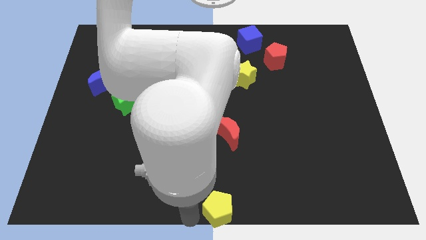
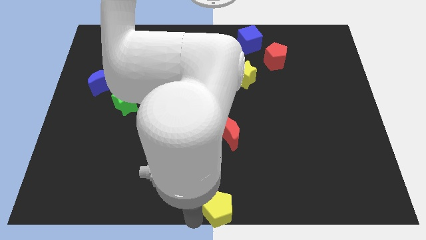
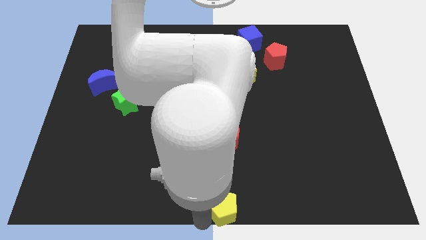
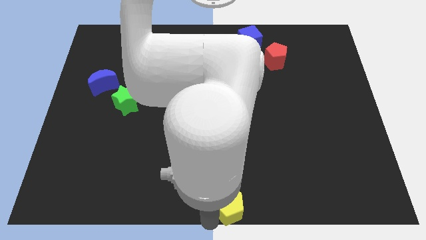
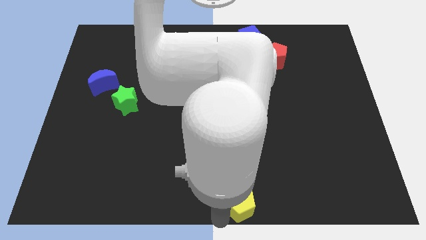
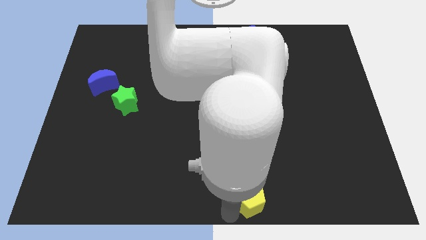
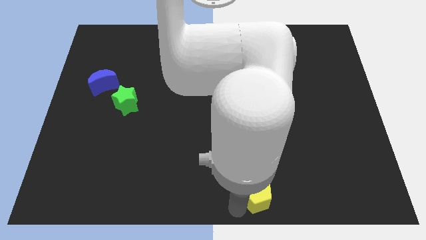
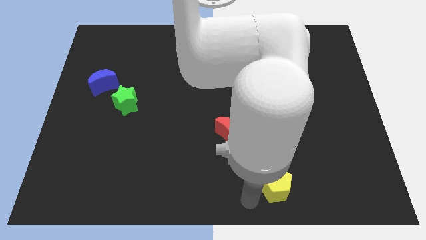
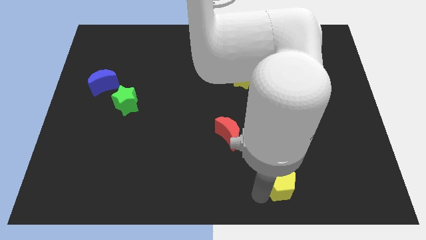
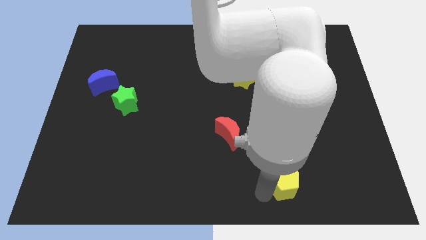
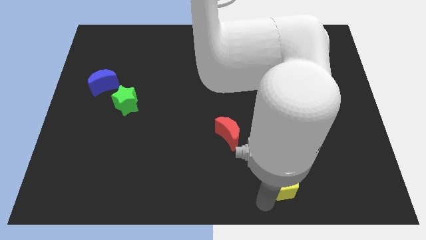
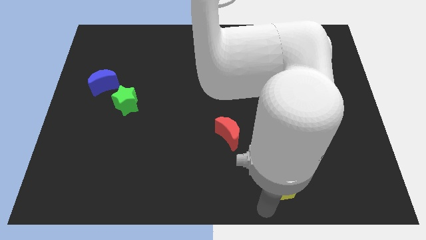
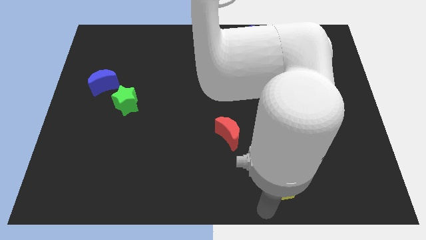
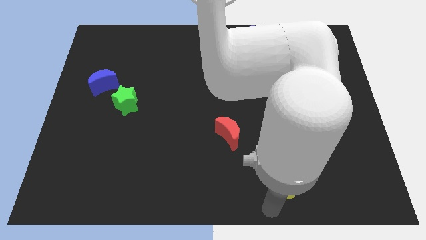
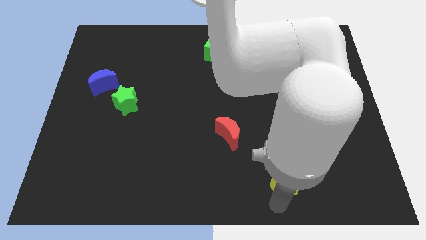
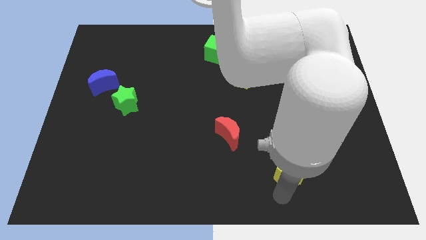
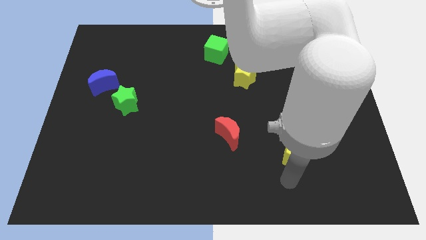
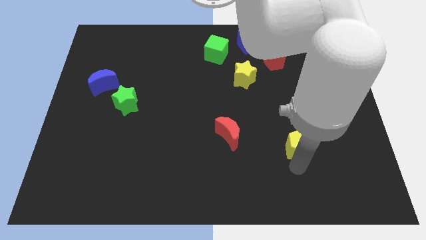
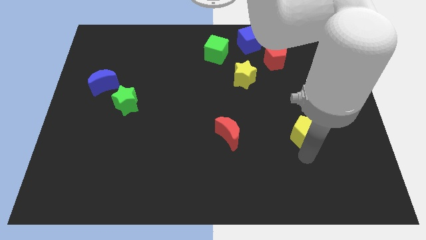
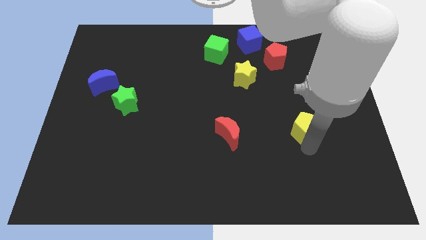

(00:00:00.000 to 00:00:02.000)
push the yellow pentagon to the horizontal right of the red moon

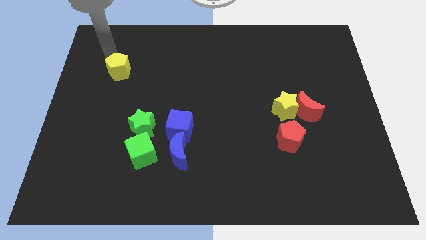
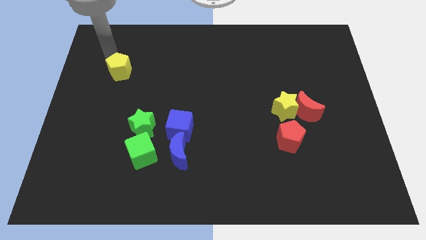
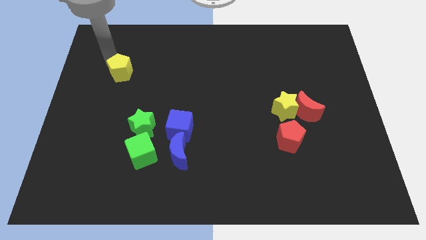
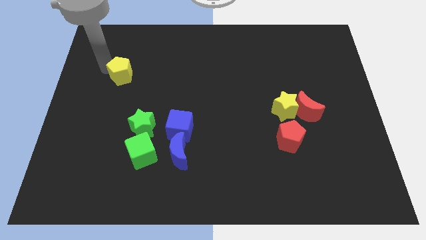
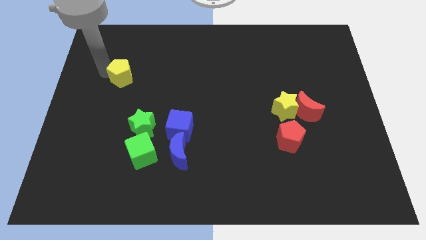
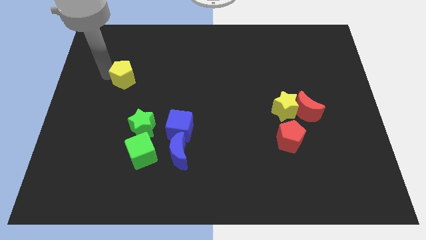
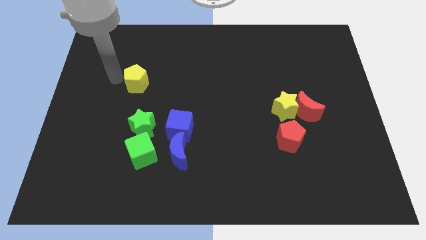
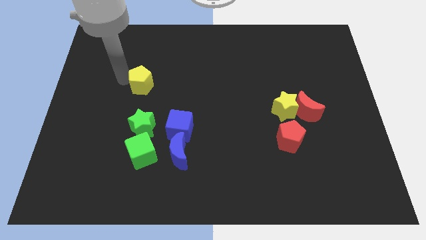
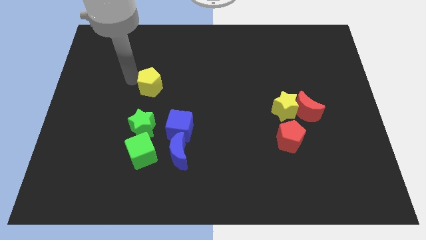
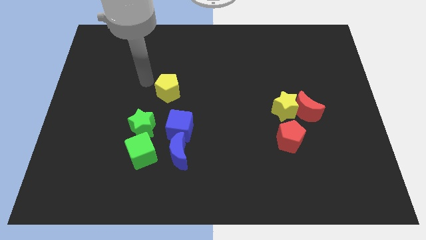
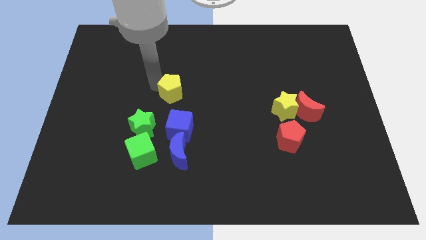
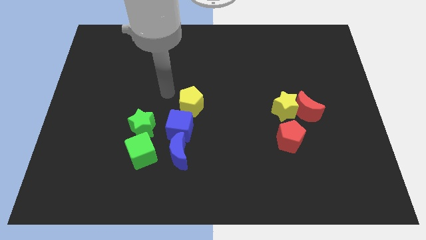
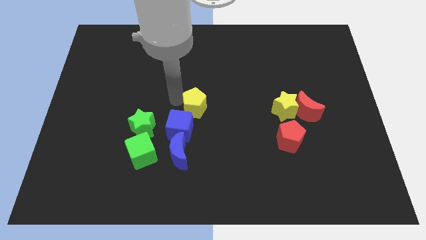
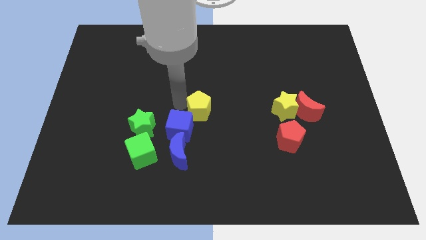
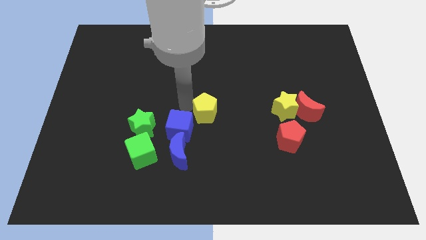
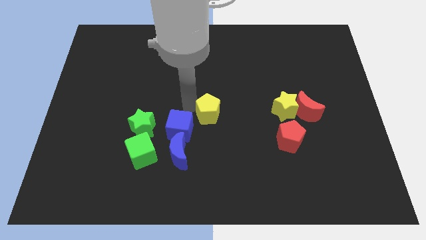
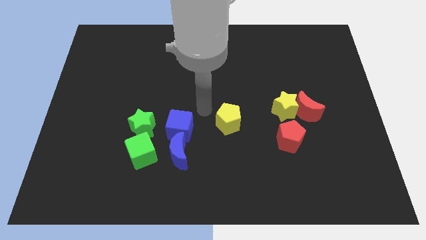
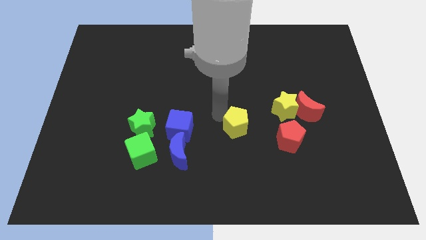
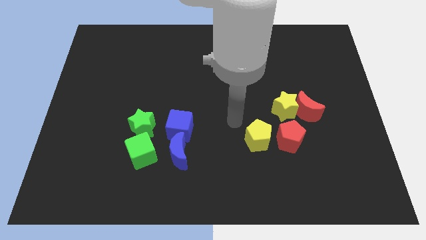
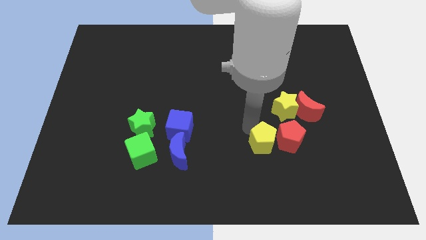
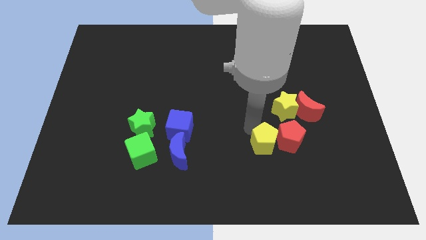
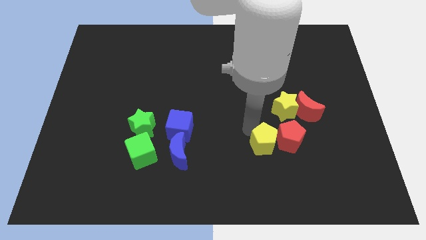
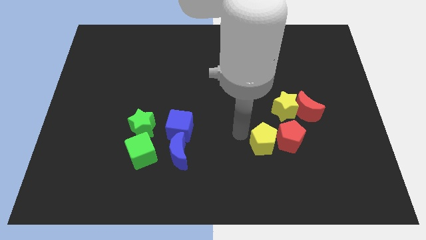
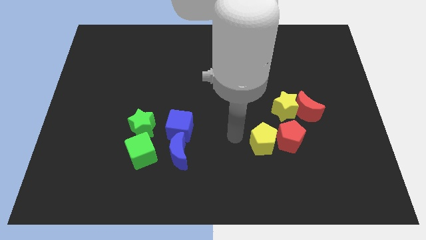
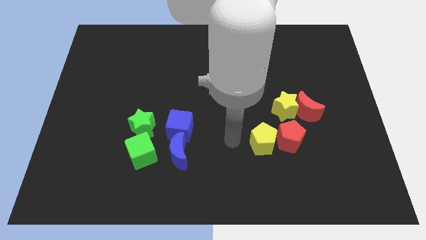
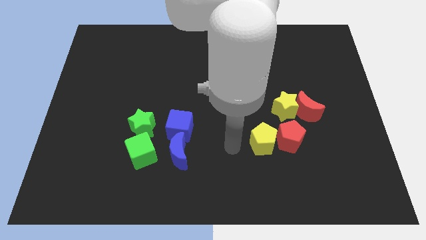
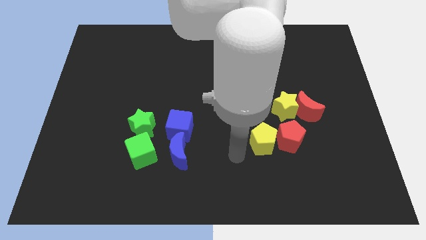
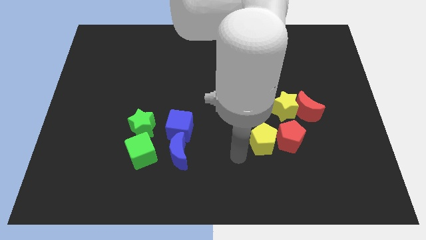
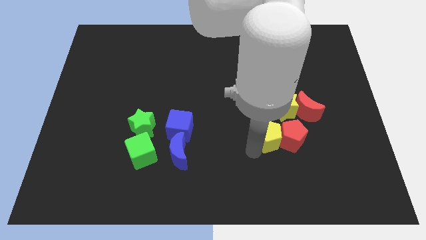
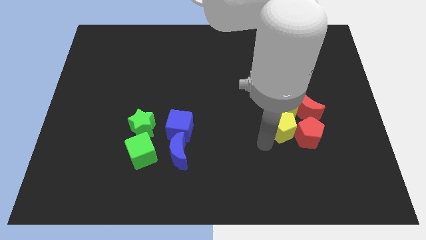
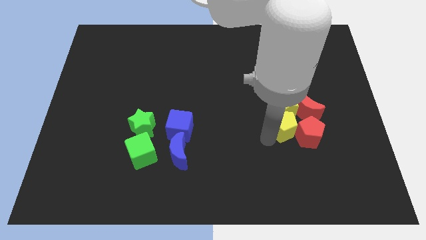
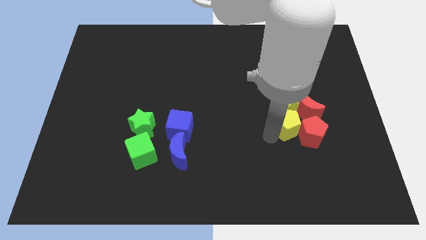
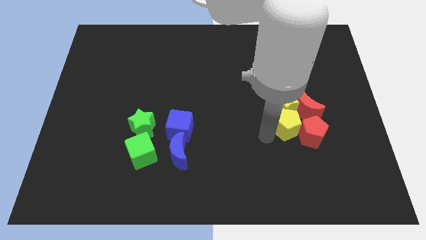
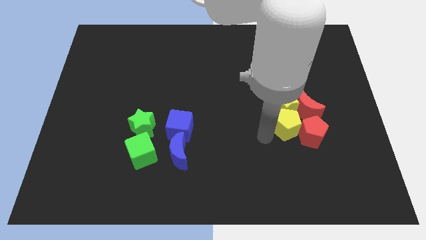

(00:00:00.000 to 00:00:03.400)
push the yellow pentagon into red pentagon

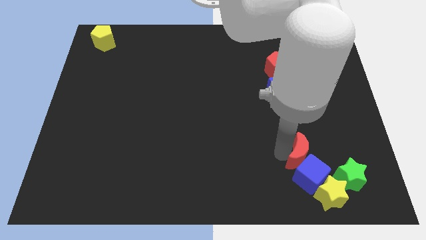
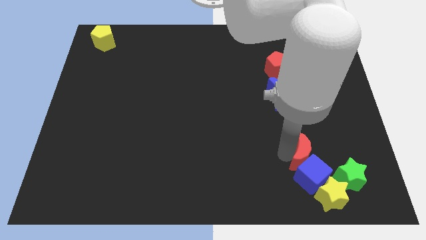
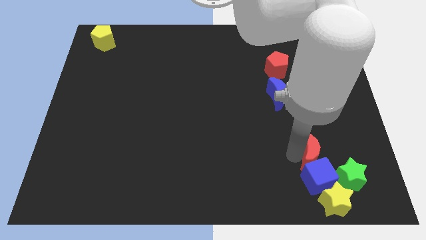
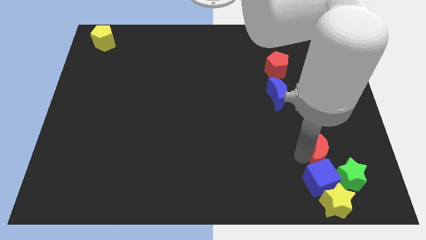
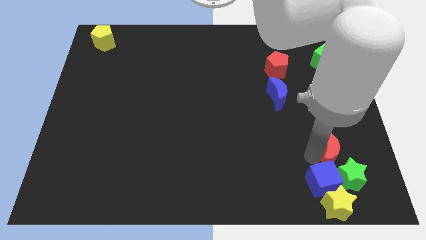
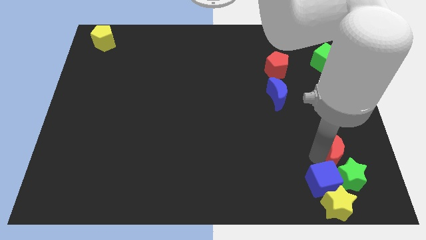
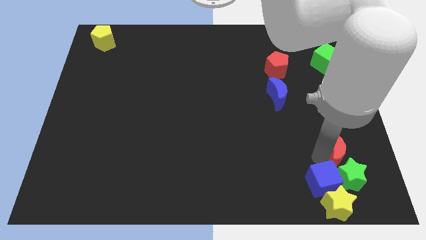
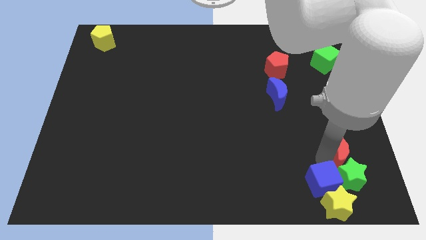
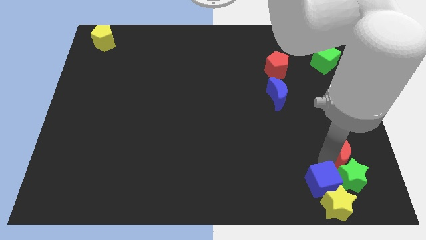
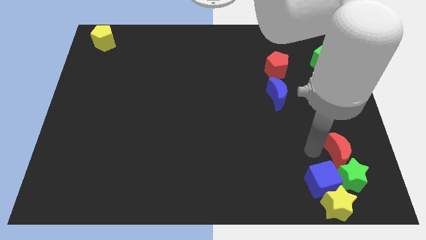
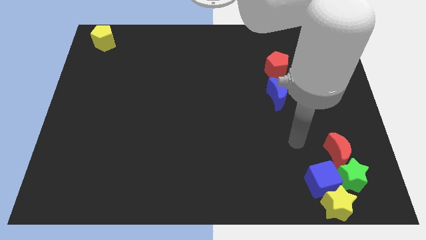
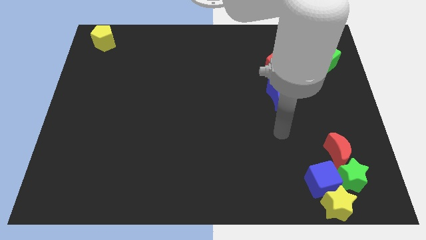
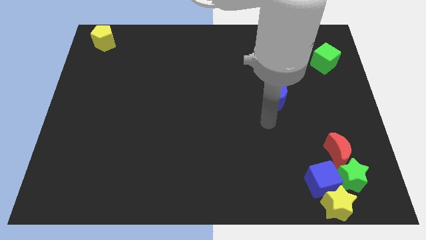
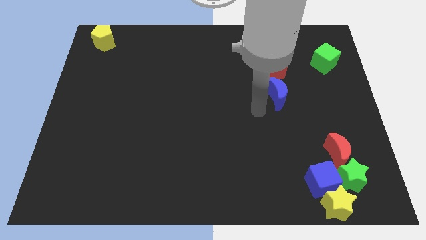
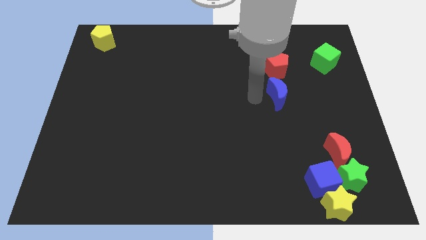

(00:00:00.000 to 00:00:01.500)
place the red crescent above the green star

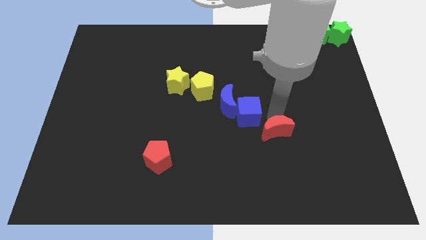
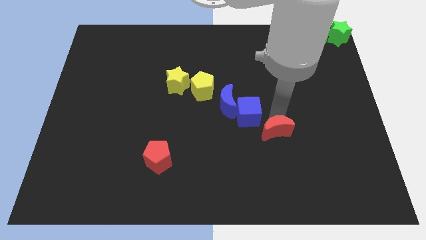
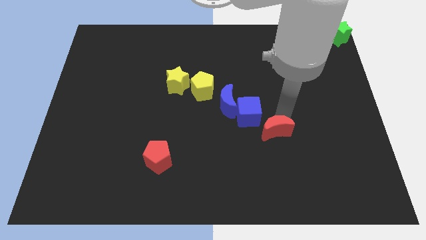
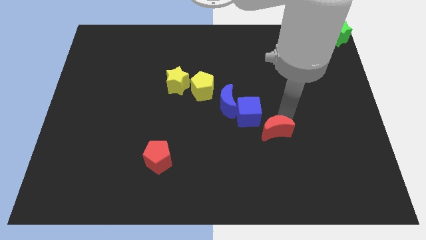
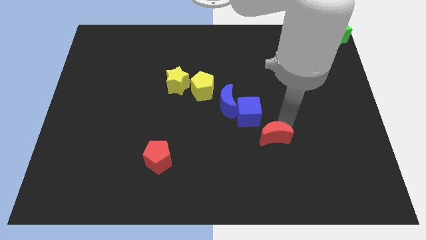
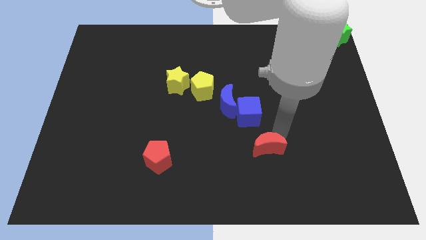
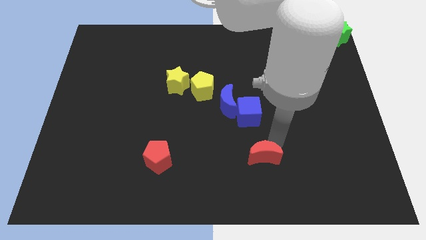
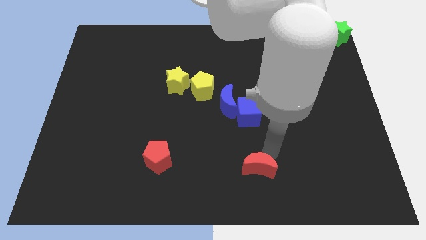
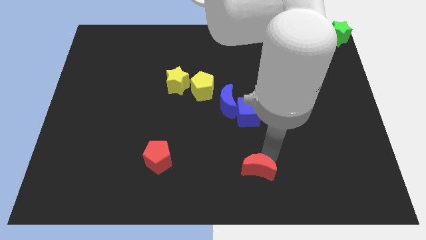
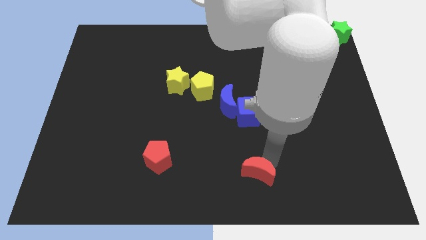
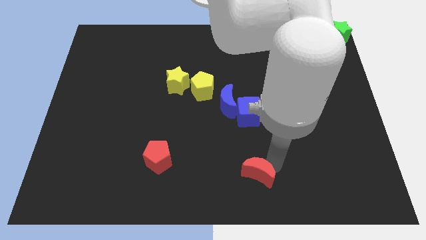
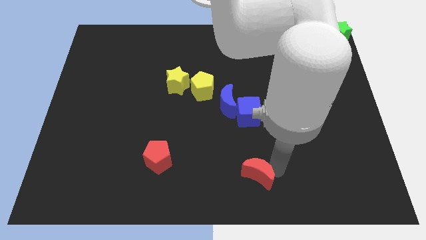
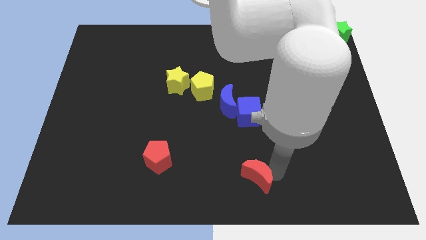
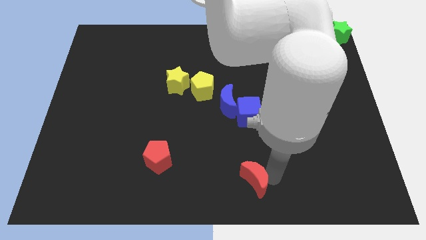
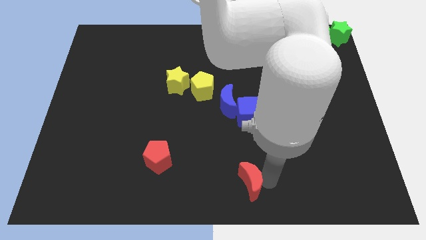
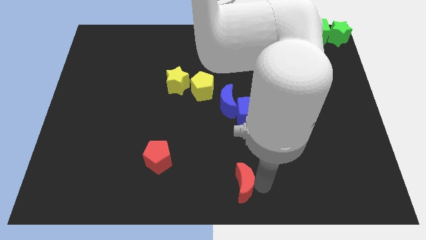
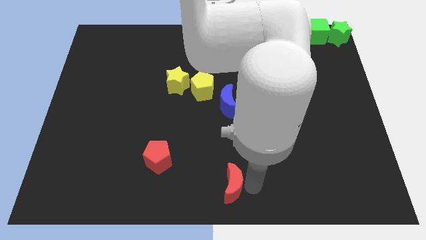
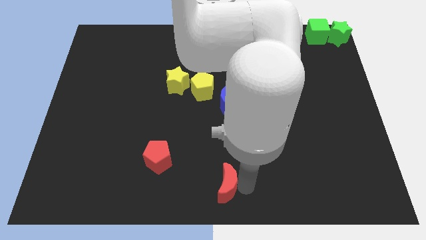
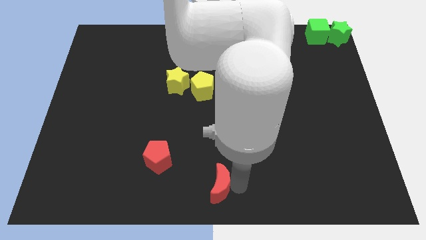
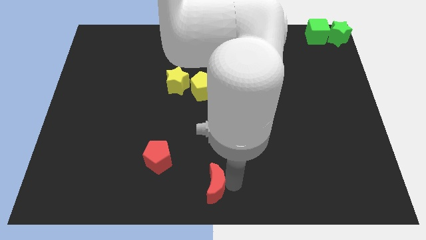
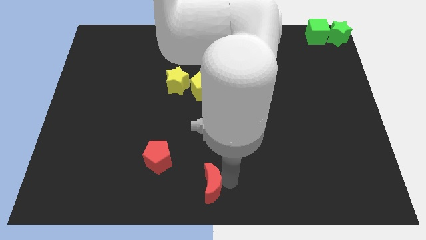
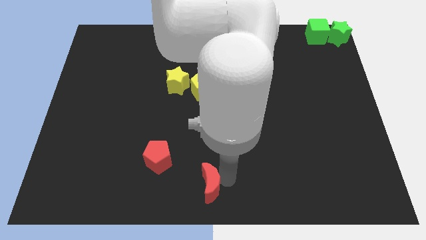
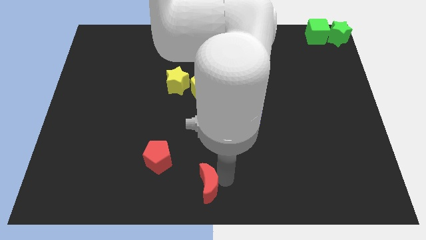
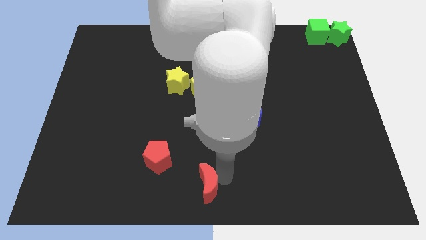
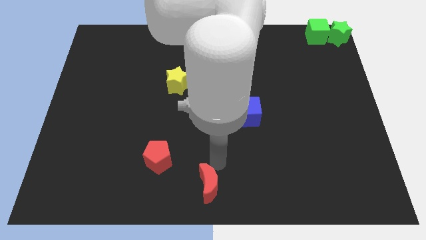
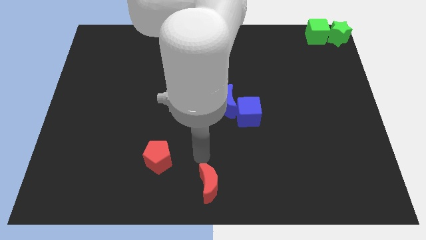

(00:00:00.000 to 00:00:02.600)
push the red moon to the bottom center
